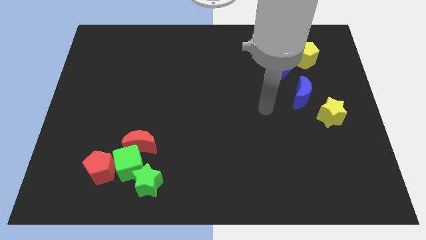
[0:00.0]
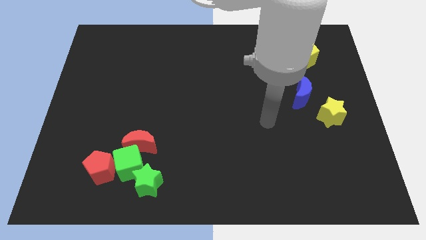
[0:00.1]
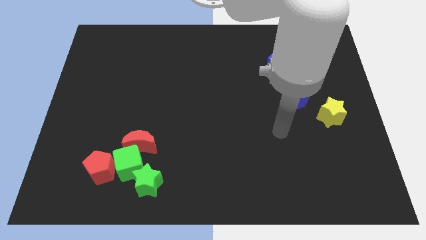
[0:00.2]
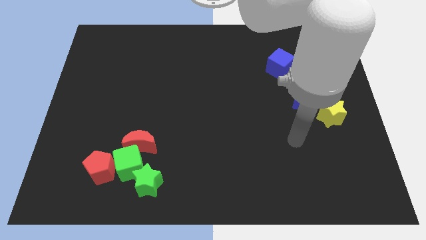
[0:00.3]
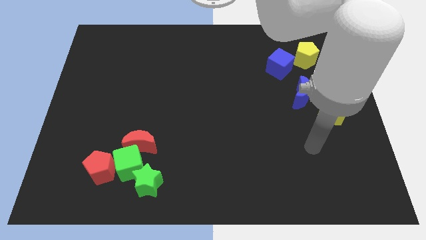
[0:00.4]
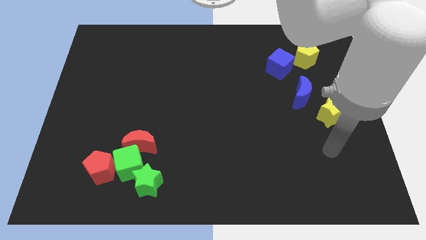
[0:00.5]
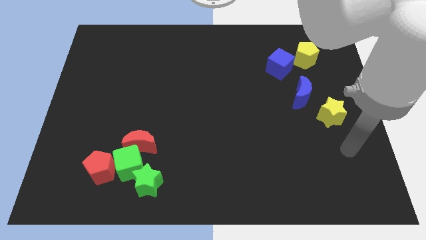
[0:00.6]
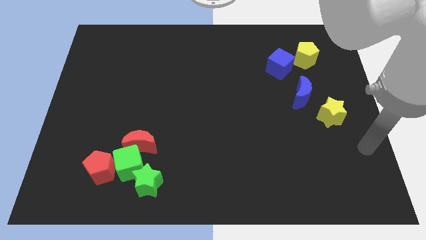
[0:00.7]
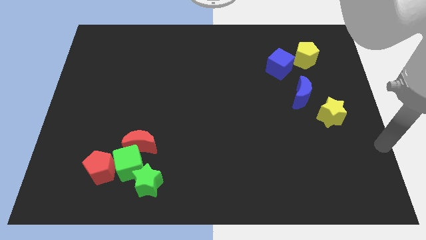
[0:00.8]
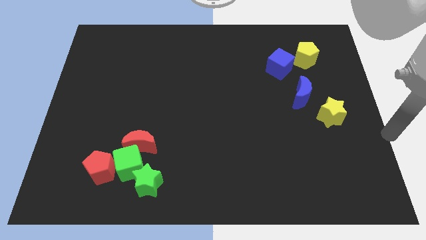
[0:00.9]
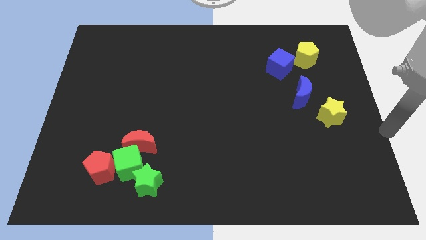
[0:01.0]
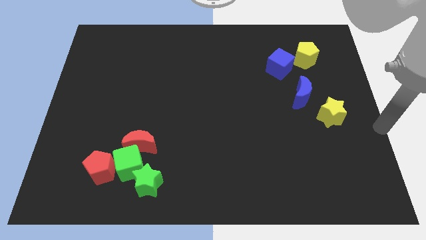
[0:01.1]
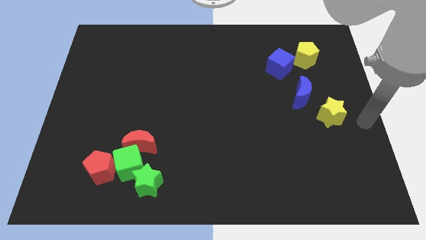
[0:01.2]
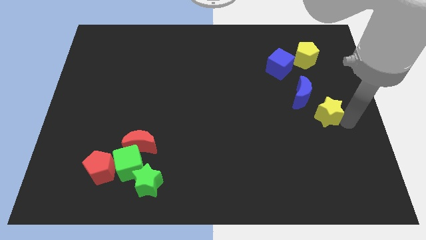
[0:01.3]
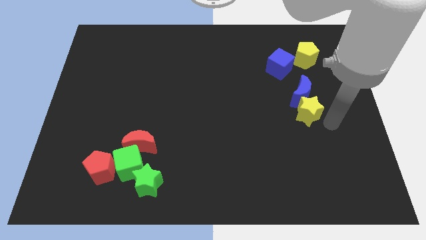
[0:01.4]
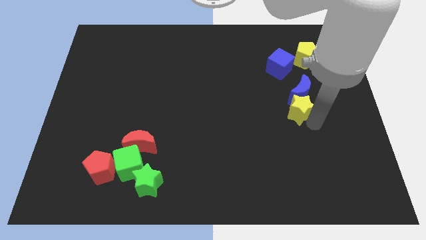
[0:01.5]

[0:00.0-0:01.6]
push the yellow star into blue crescent

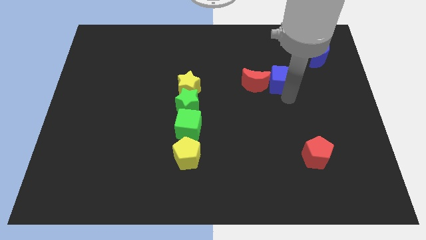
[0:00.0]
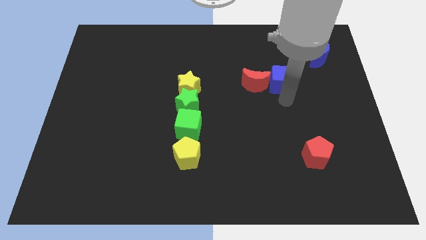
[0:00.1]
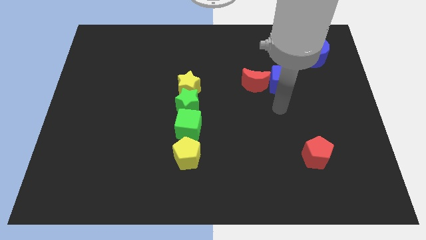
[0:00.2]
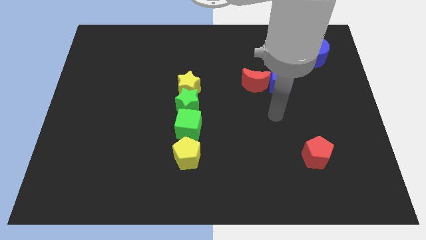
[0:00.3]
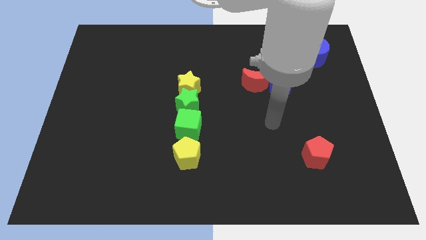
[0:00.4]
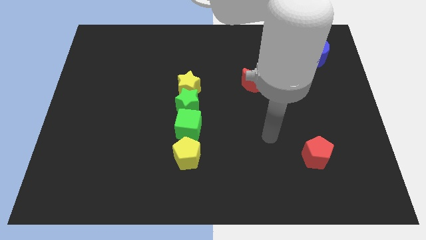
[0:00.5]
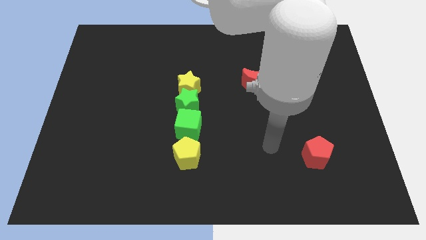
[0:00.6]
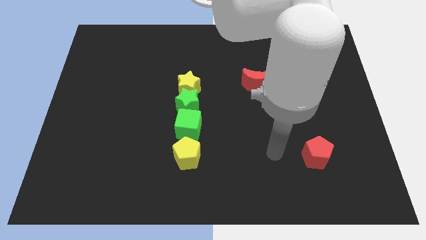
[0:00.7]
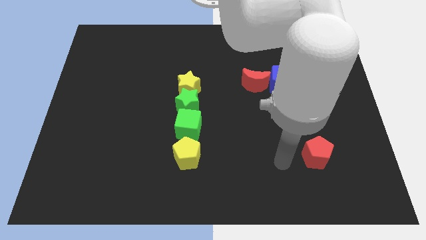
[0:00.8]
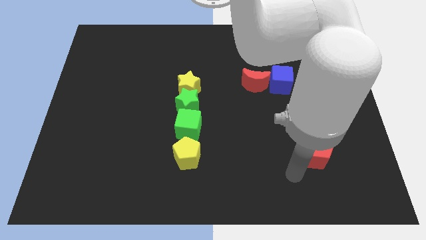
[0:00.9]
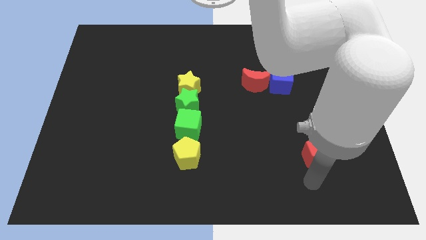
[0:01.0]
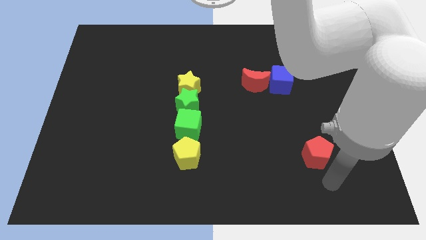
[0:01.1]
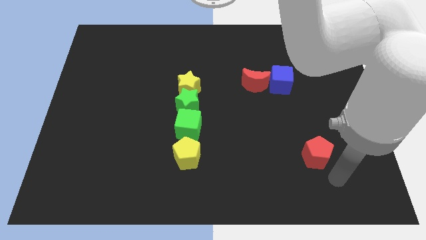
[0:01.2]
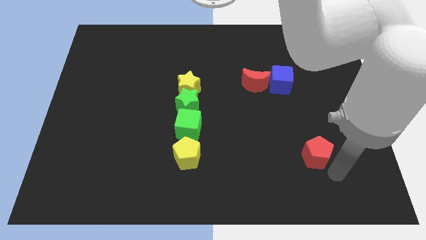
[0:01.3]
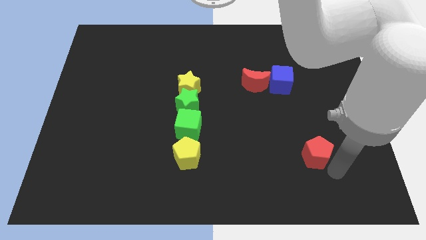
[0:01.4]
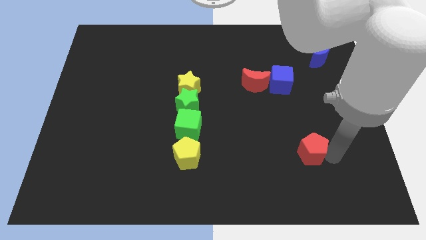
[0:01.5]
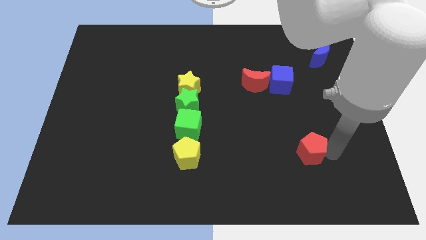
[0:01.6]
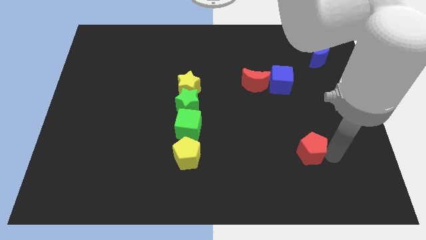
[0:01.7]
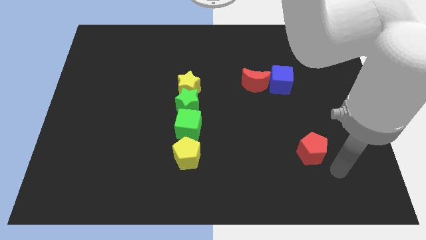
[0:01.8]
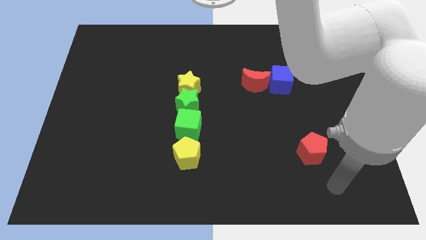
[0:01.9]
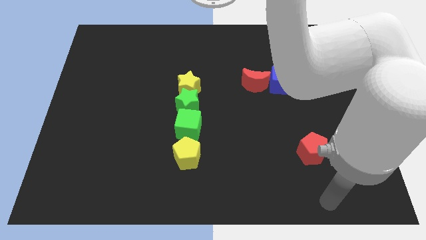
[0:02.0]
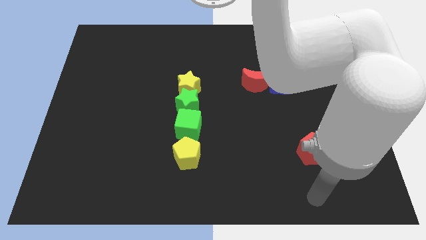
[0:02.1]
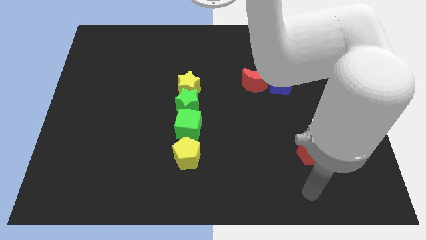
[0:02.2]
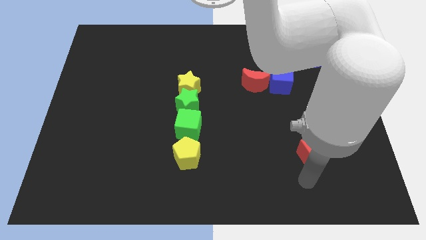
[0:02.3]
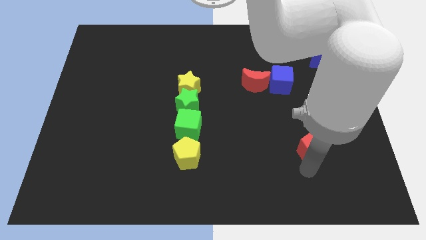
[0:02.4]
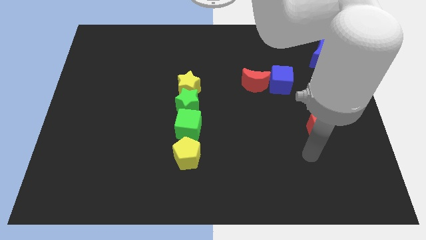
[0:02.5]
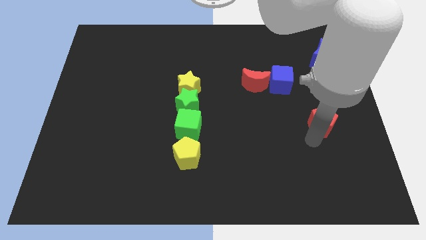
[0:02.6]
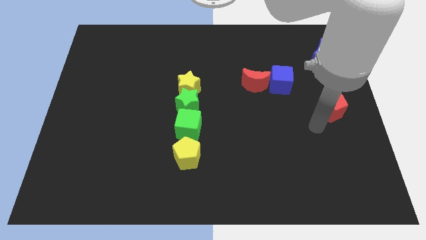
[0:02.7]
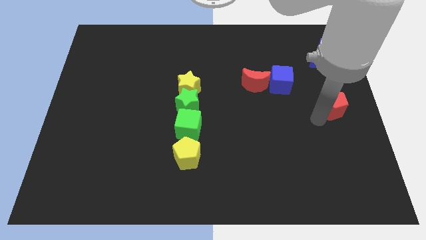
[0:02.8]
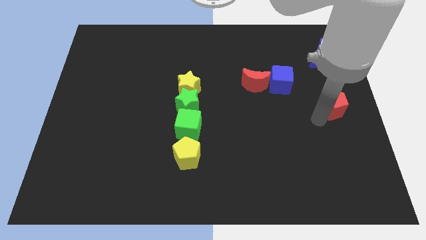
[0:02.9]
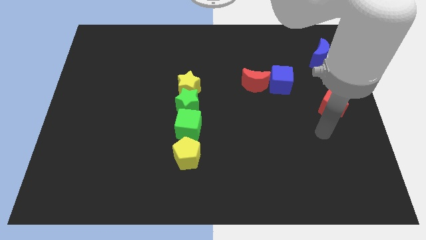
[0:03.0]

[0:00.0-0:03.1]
place the red pentagon underneath the blue crescent

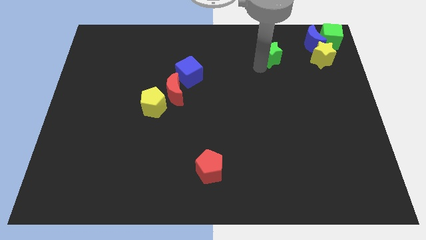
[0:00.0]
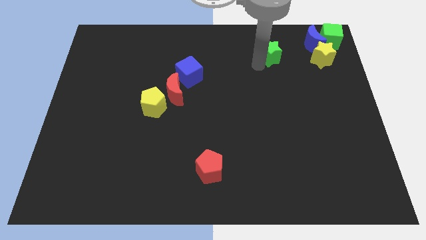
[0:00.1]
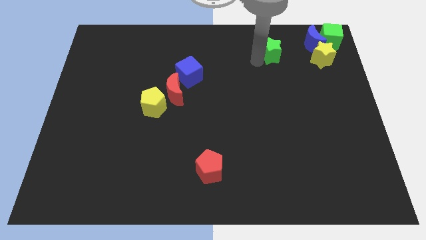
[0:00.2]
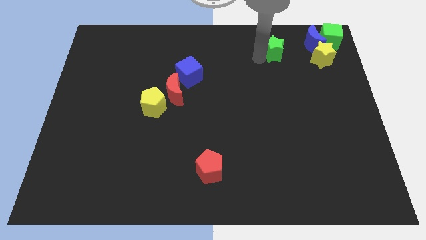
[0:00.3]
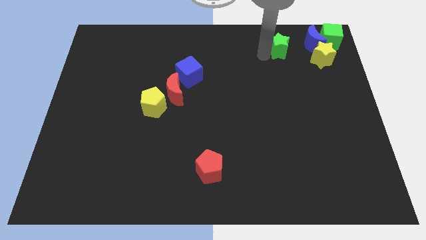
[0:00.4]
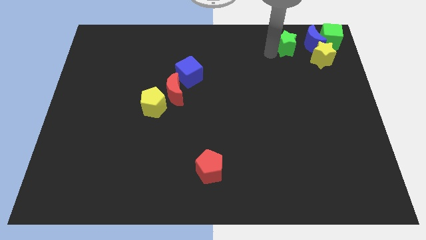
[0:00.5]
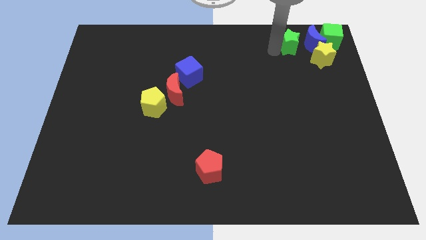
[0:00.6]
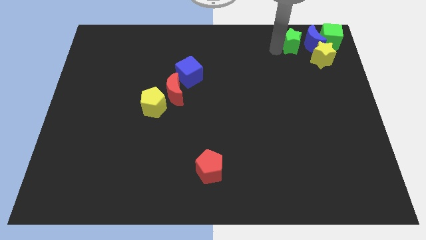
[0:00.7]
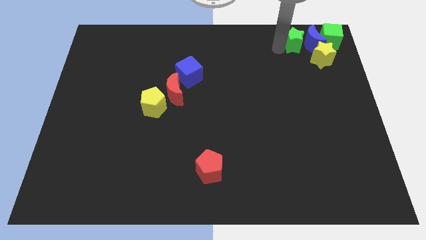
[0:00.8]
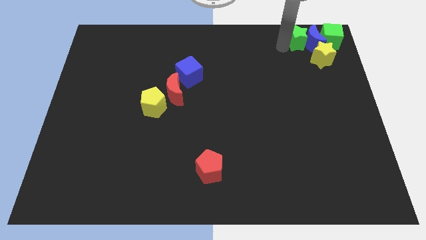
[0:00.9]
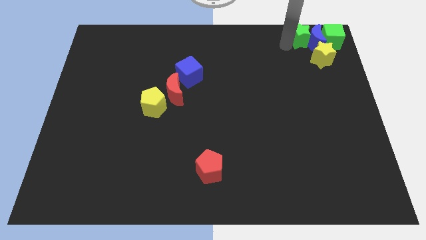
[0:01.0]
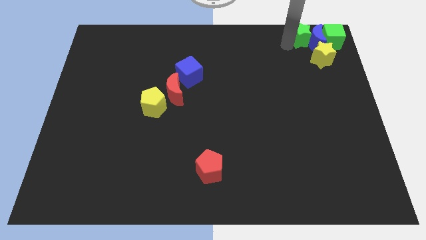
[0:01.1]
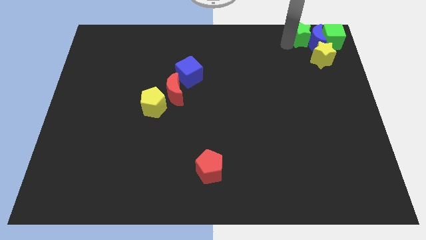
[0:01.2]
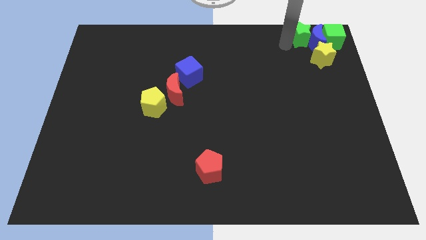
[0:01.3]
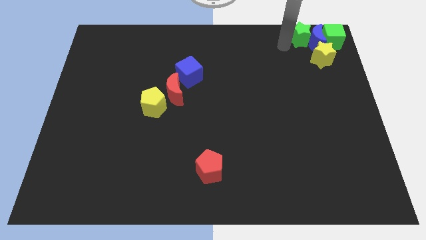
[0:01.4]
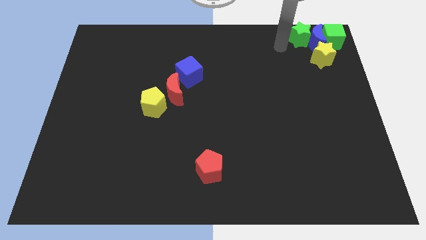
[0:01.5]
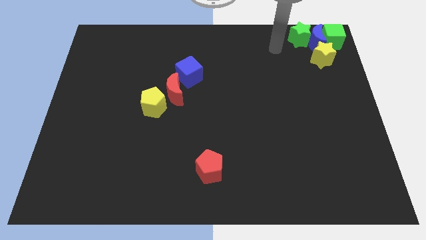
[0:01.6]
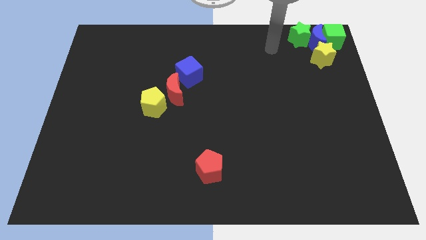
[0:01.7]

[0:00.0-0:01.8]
push the green star into the blue moon

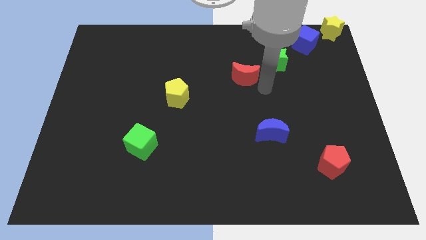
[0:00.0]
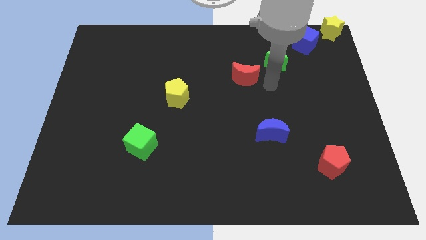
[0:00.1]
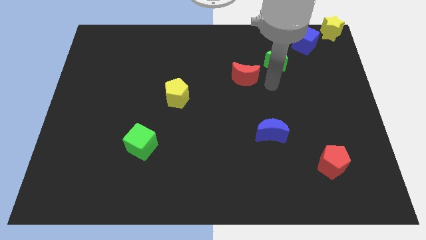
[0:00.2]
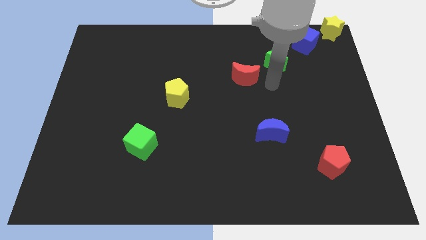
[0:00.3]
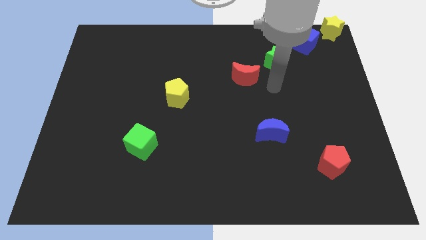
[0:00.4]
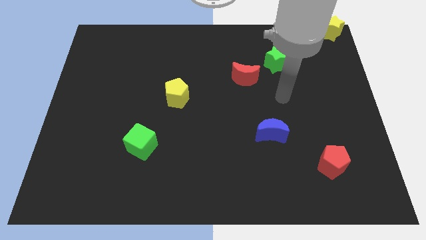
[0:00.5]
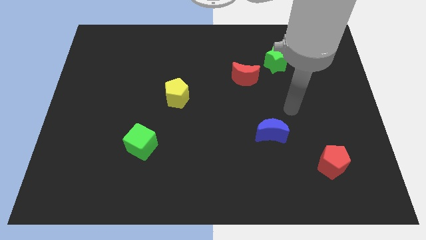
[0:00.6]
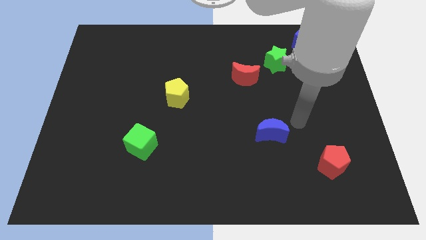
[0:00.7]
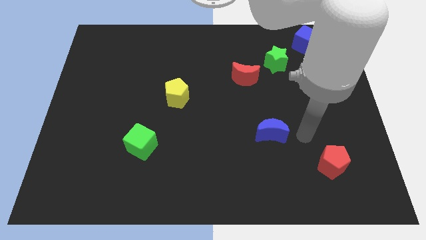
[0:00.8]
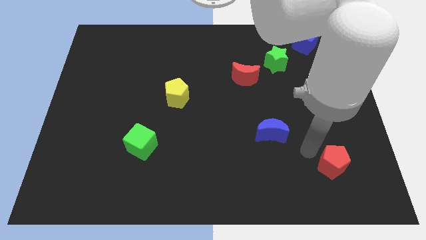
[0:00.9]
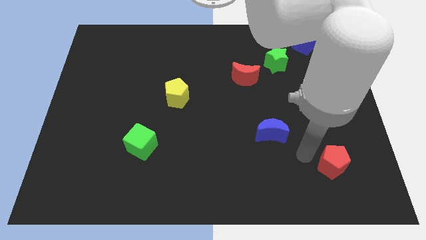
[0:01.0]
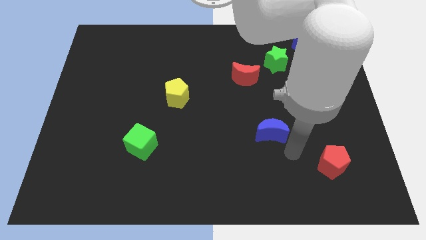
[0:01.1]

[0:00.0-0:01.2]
point the arm in between the red pentagon and the blue moon

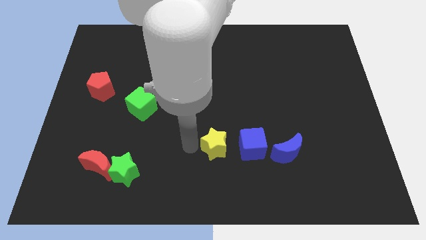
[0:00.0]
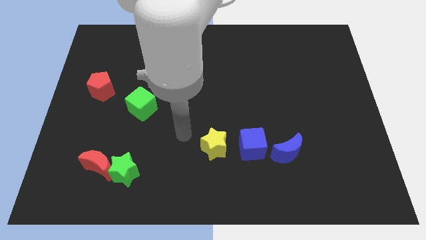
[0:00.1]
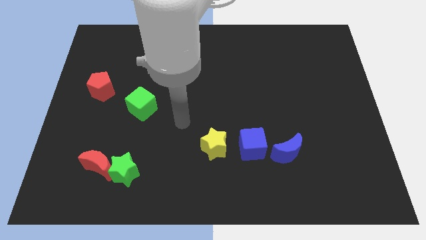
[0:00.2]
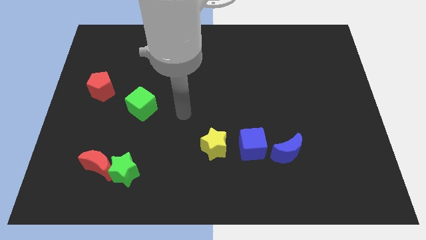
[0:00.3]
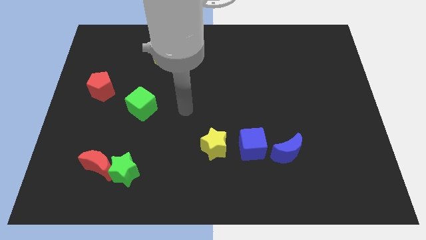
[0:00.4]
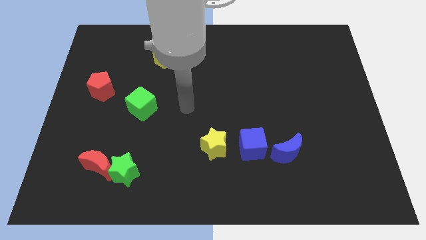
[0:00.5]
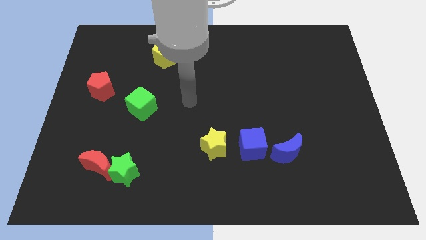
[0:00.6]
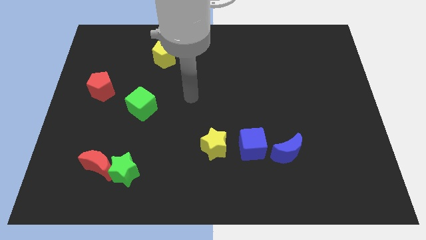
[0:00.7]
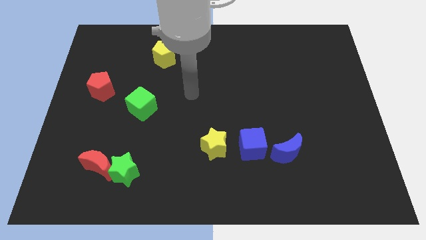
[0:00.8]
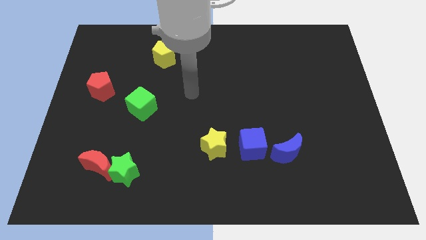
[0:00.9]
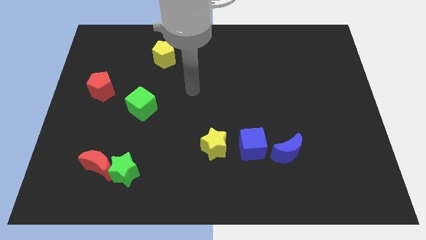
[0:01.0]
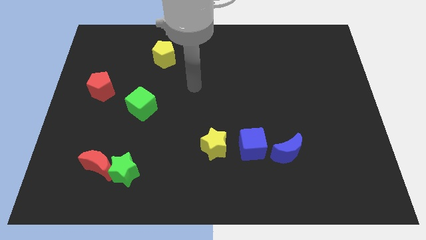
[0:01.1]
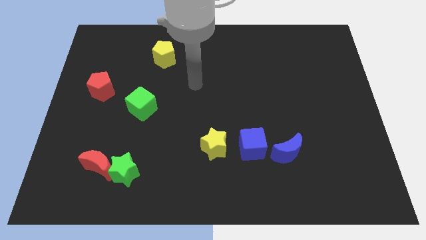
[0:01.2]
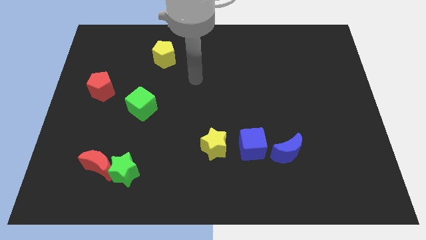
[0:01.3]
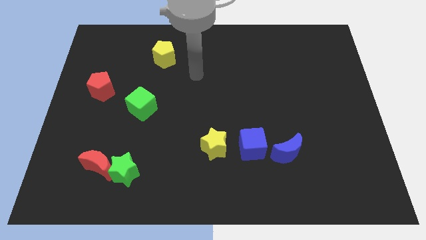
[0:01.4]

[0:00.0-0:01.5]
move your hand away from the yellow star
